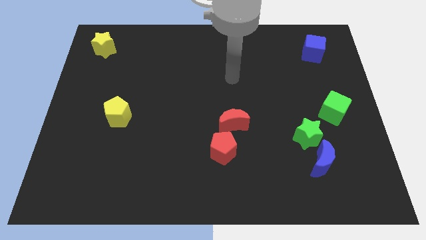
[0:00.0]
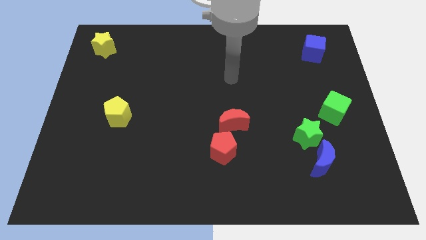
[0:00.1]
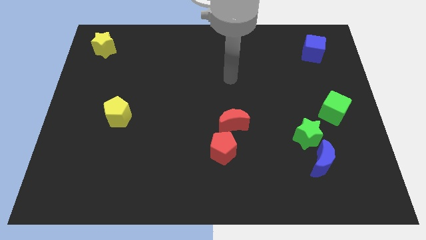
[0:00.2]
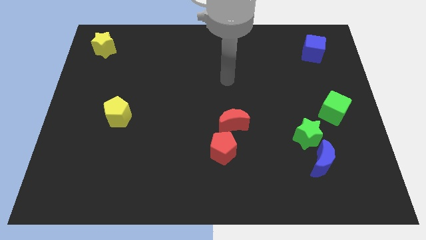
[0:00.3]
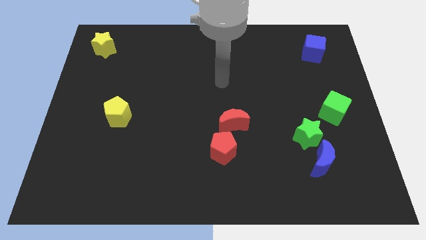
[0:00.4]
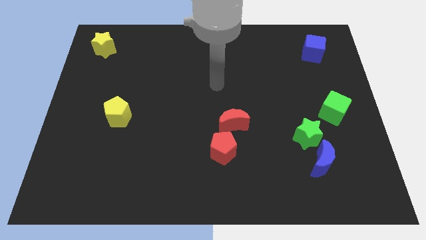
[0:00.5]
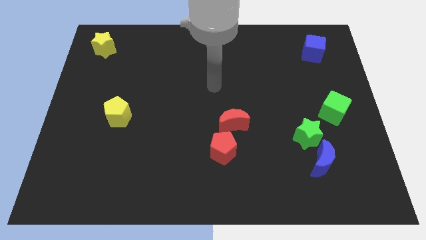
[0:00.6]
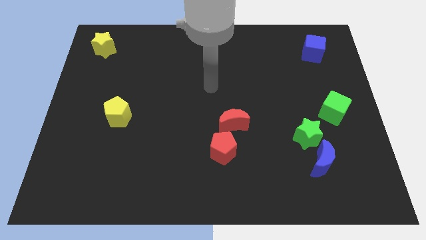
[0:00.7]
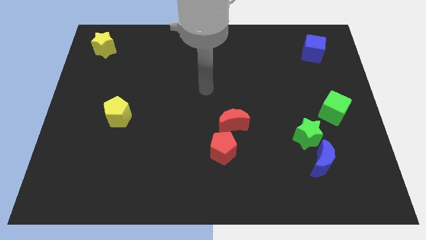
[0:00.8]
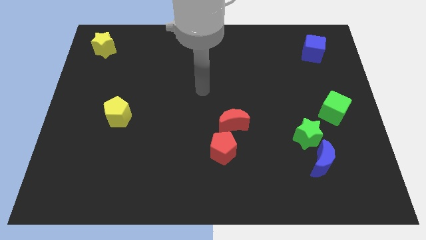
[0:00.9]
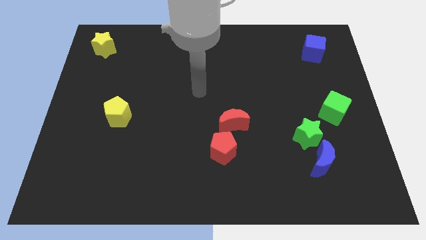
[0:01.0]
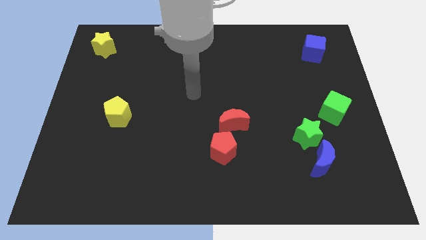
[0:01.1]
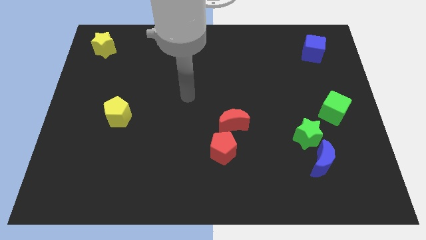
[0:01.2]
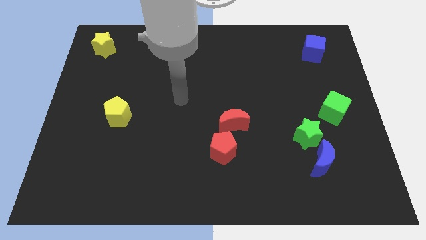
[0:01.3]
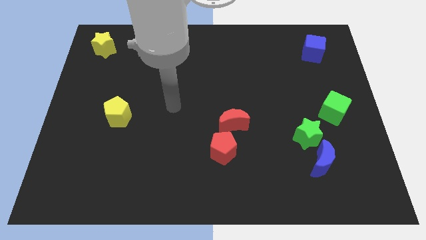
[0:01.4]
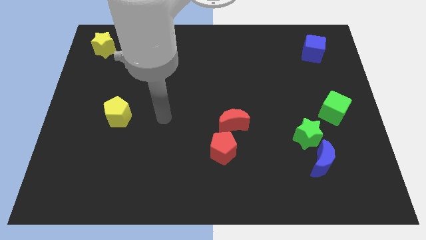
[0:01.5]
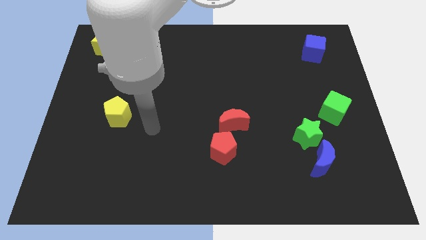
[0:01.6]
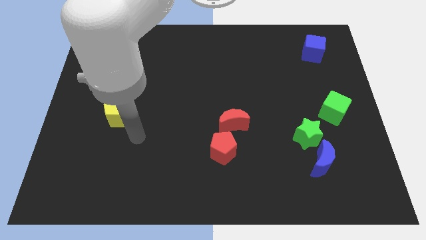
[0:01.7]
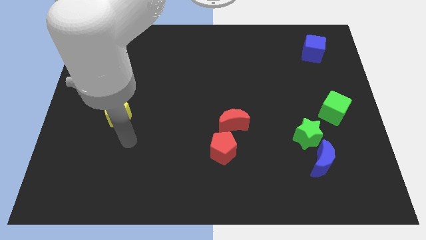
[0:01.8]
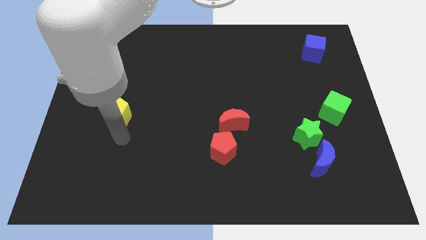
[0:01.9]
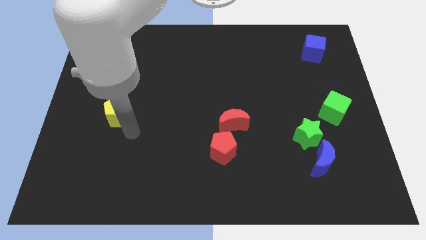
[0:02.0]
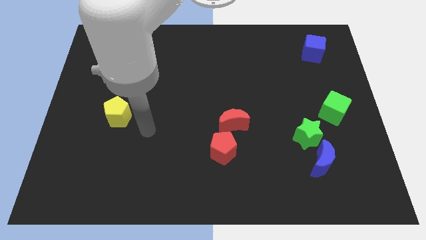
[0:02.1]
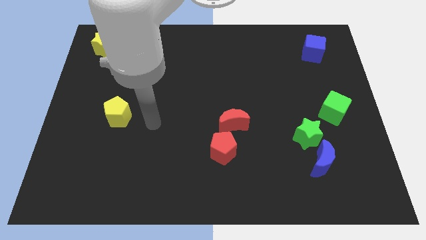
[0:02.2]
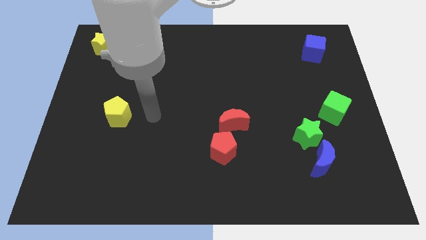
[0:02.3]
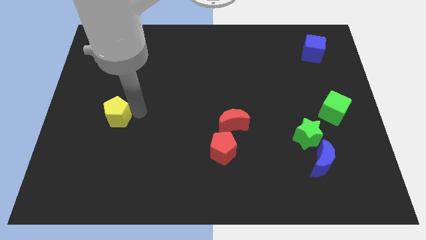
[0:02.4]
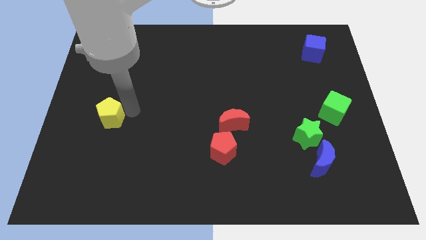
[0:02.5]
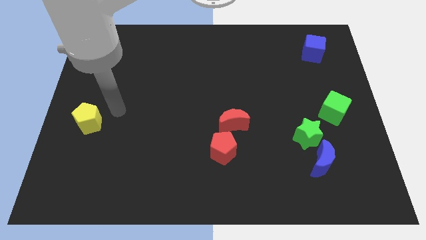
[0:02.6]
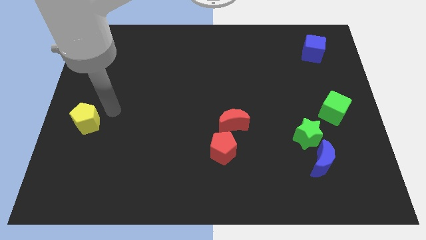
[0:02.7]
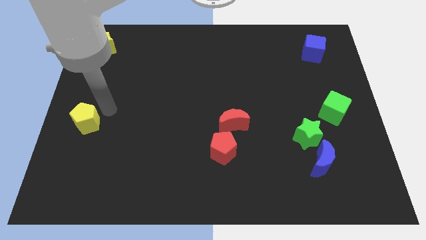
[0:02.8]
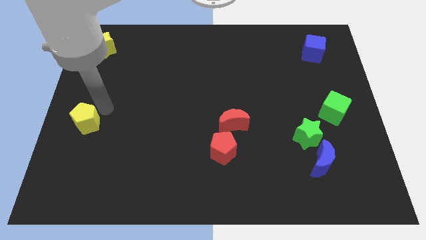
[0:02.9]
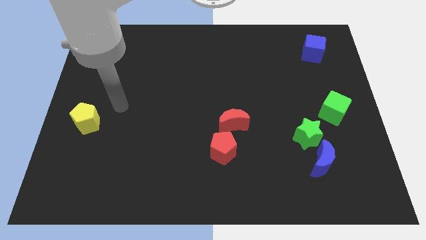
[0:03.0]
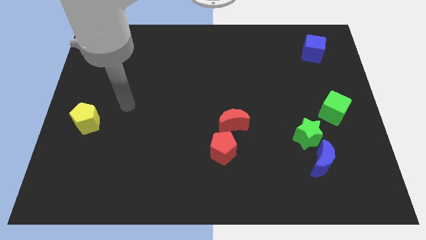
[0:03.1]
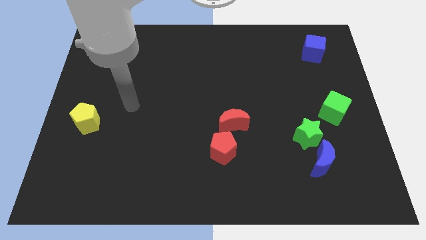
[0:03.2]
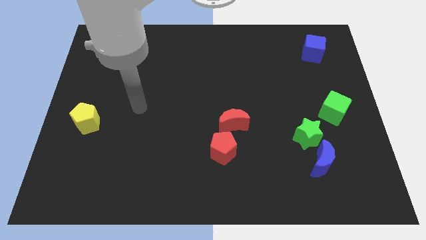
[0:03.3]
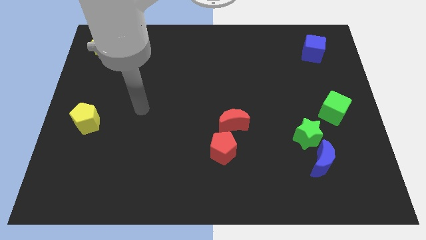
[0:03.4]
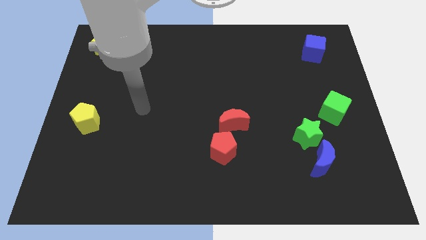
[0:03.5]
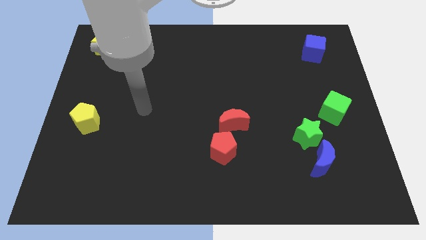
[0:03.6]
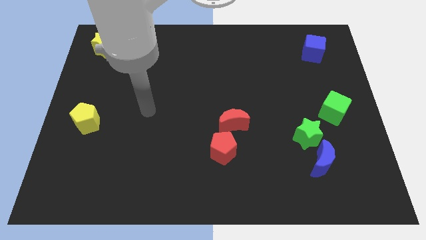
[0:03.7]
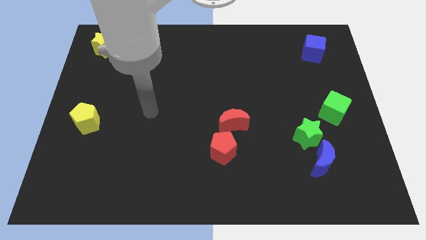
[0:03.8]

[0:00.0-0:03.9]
place the yellow pentagon below the yellow star

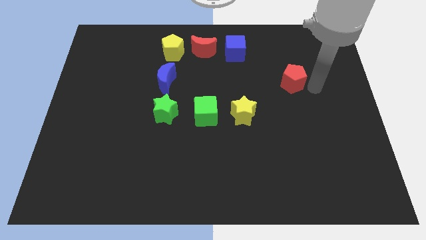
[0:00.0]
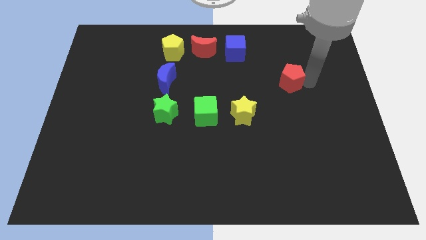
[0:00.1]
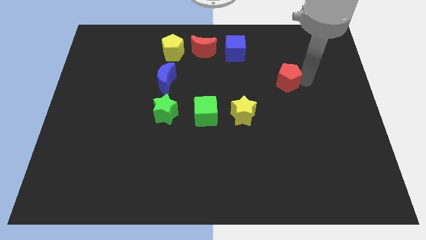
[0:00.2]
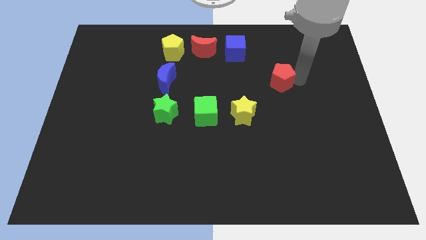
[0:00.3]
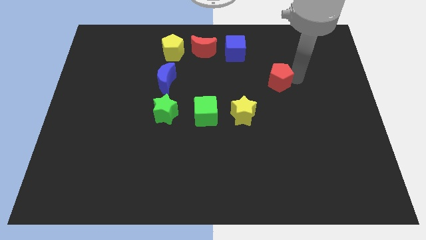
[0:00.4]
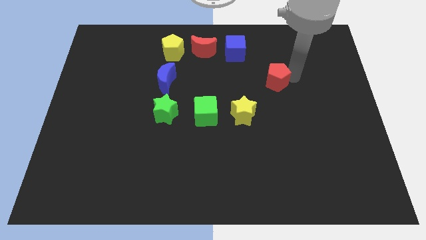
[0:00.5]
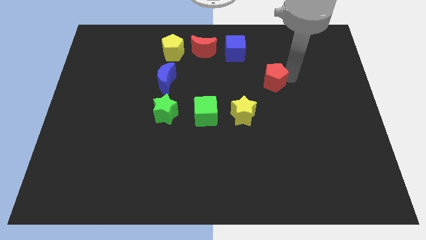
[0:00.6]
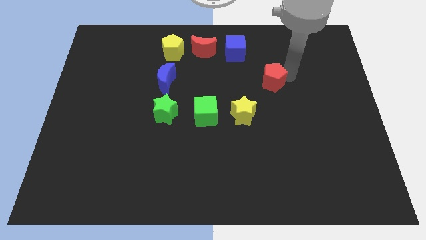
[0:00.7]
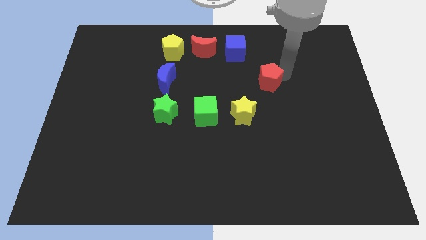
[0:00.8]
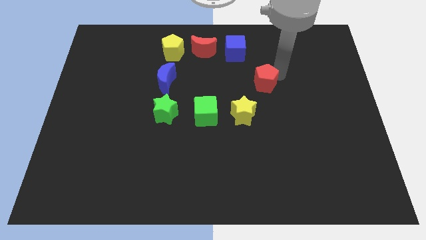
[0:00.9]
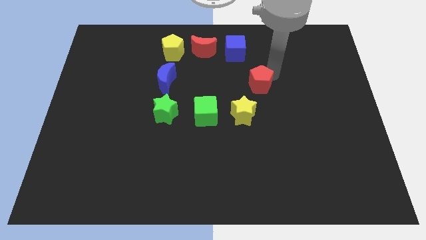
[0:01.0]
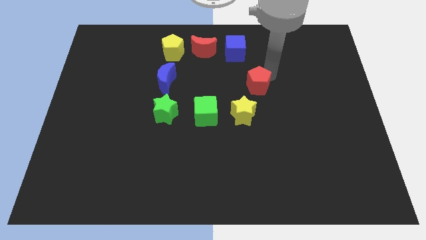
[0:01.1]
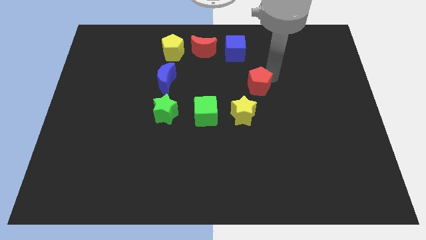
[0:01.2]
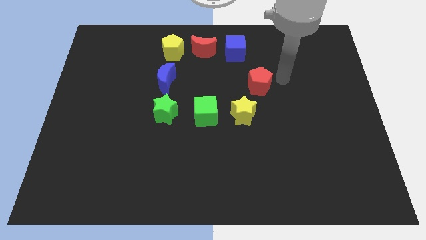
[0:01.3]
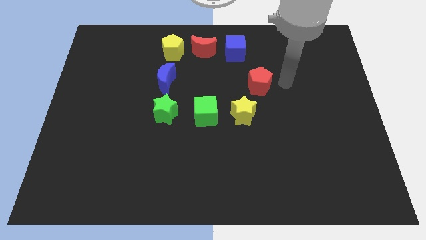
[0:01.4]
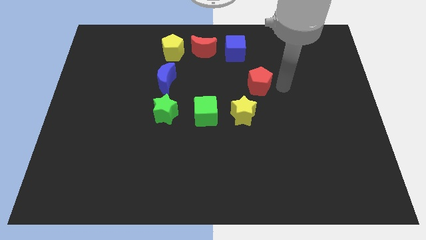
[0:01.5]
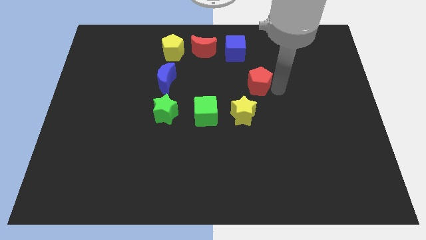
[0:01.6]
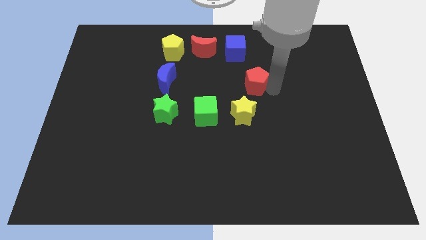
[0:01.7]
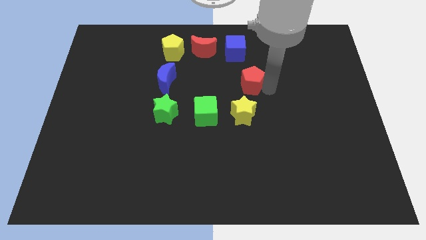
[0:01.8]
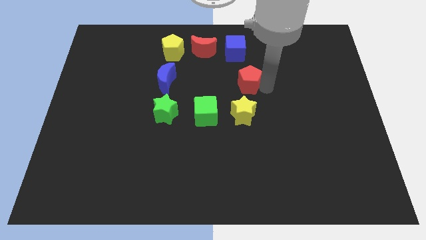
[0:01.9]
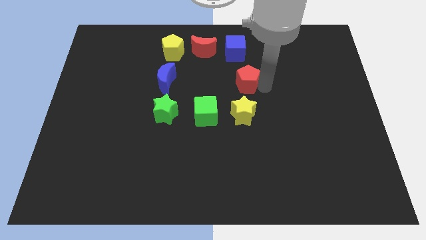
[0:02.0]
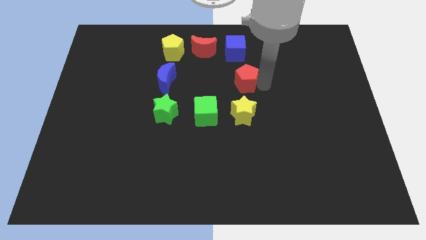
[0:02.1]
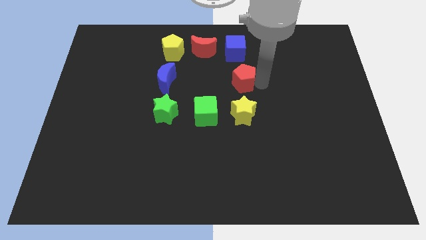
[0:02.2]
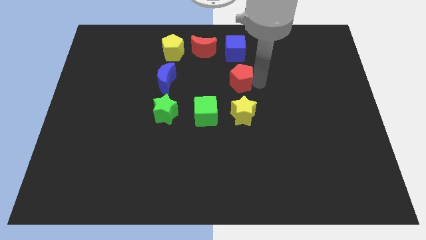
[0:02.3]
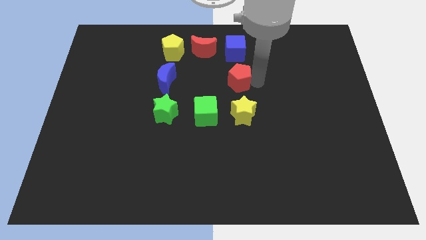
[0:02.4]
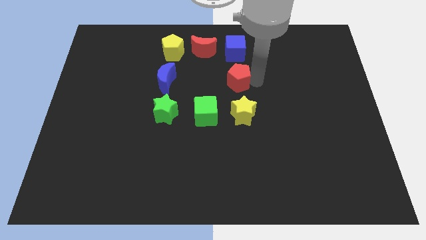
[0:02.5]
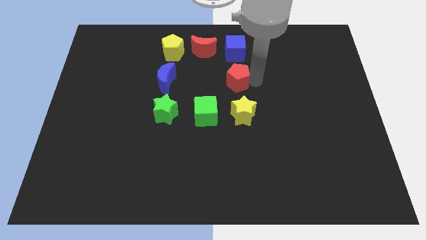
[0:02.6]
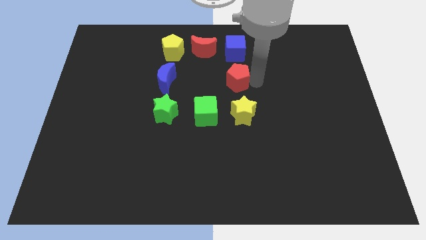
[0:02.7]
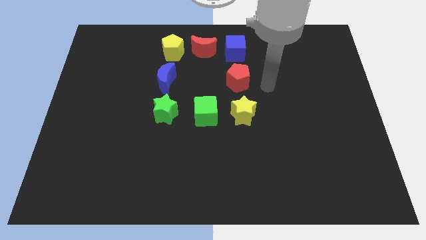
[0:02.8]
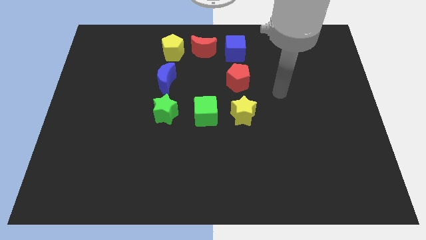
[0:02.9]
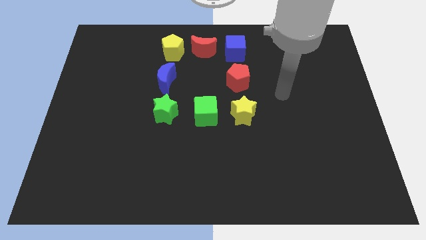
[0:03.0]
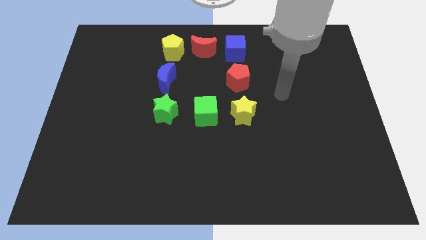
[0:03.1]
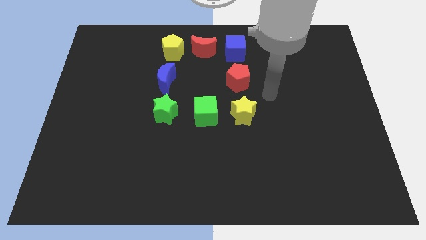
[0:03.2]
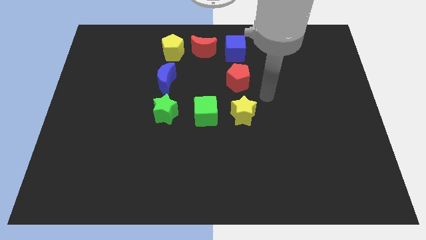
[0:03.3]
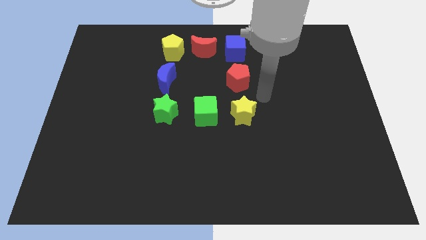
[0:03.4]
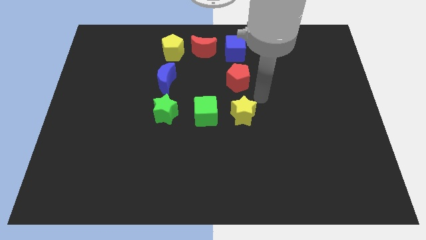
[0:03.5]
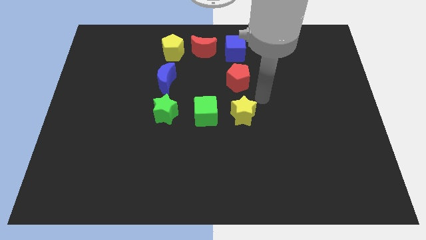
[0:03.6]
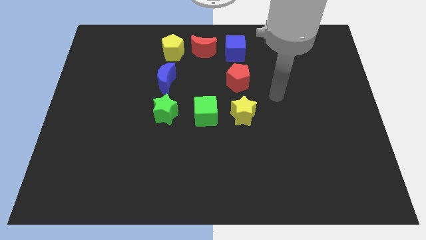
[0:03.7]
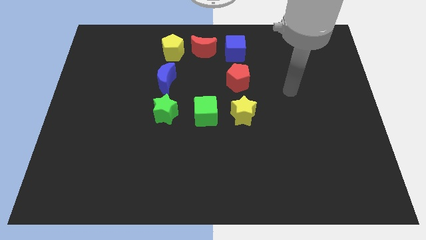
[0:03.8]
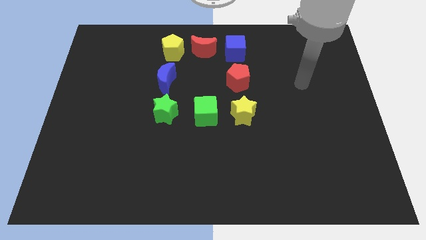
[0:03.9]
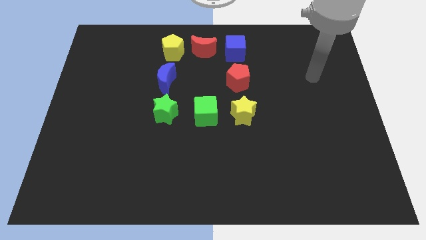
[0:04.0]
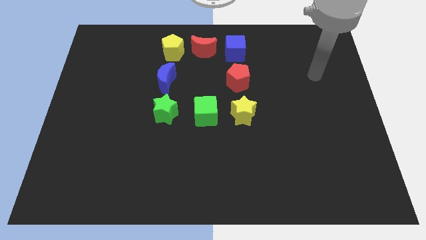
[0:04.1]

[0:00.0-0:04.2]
place the red pentagon int between the blue cube and the yellow star

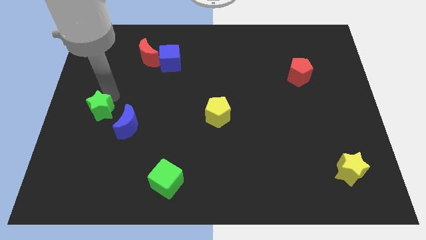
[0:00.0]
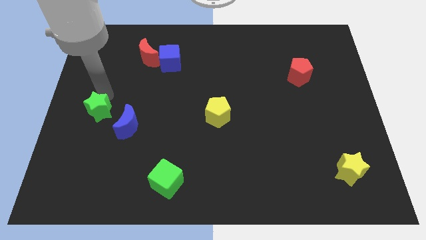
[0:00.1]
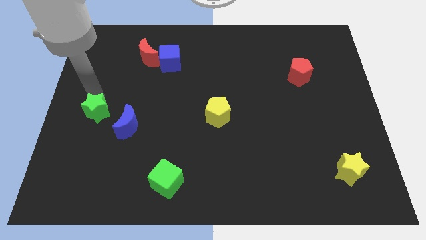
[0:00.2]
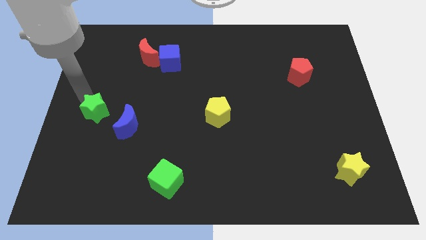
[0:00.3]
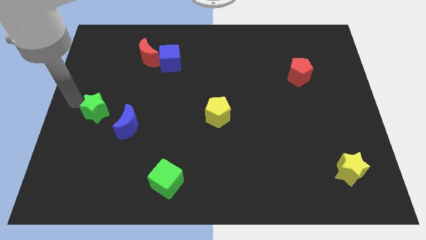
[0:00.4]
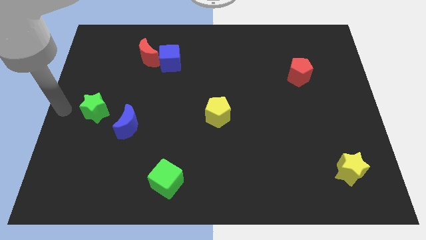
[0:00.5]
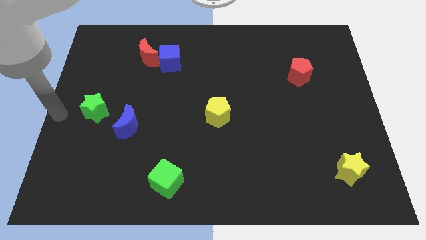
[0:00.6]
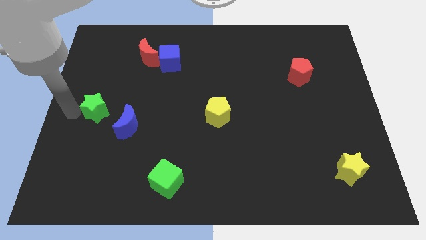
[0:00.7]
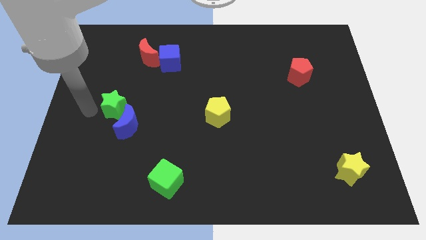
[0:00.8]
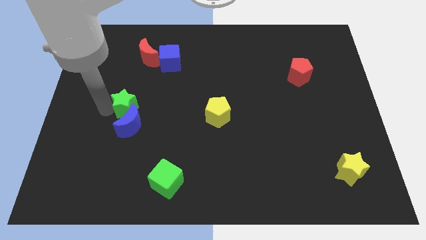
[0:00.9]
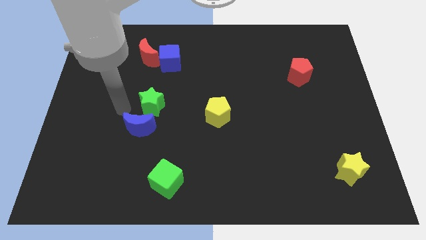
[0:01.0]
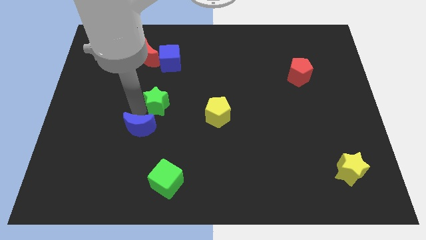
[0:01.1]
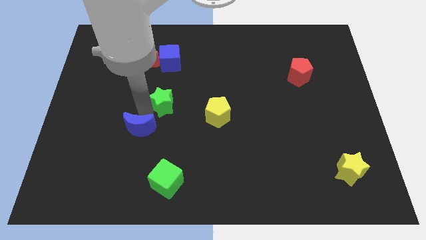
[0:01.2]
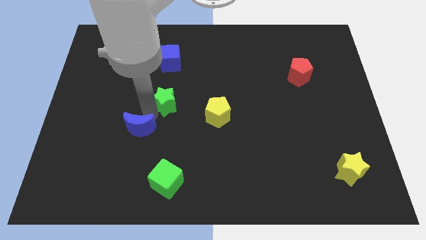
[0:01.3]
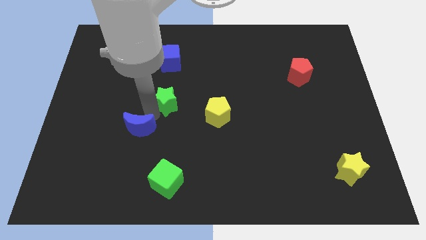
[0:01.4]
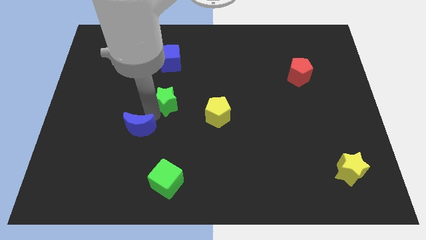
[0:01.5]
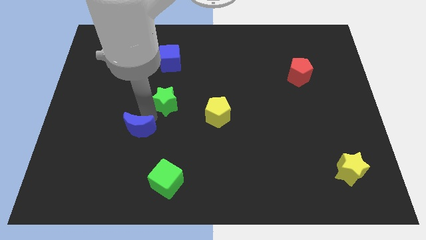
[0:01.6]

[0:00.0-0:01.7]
place the green star between the blue cube and the green cube
